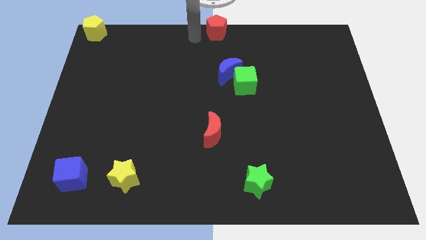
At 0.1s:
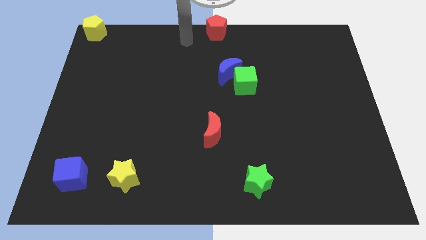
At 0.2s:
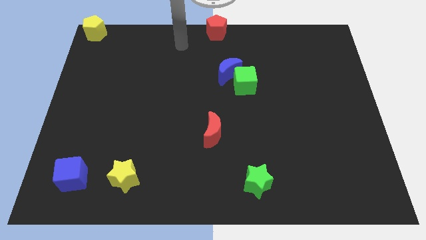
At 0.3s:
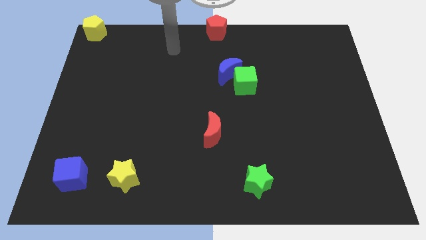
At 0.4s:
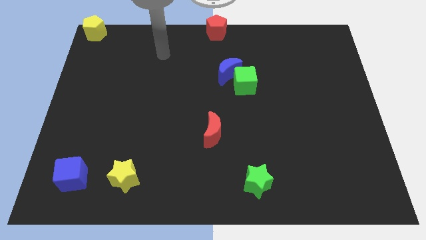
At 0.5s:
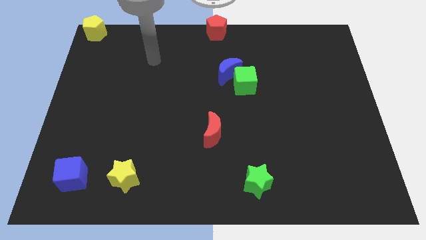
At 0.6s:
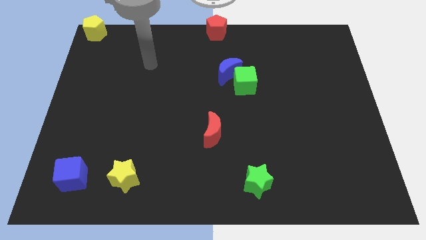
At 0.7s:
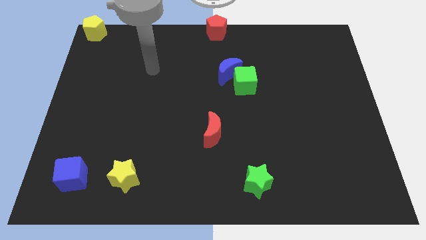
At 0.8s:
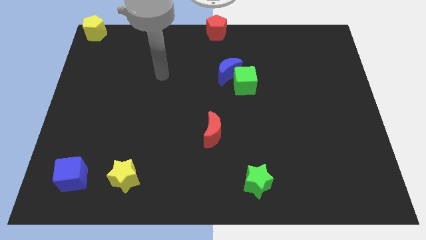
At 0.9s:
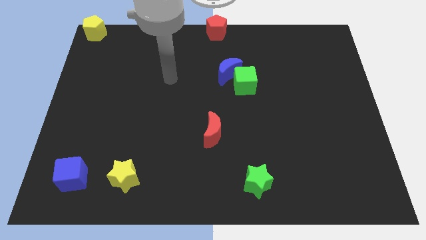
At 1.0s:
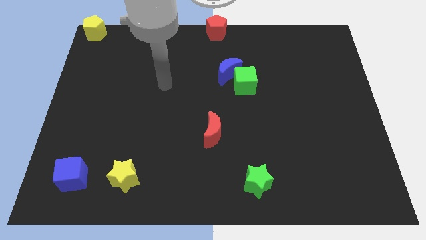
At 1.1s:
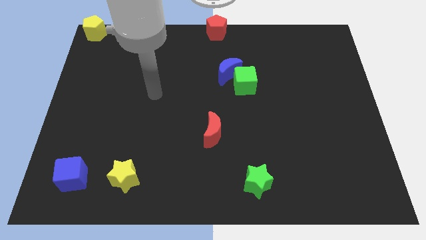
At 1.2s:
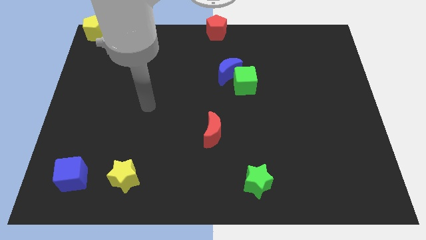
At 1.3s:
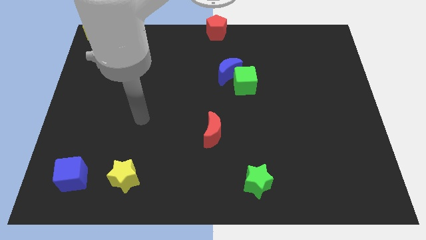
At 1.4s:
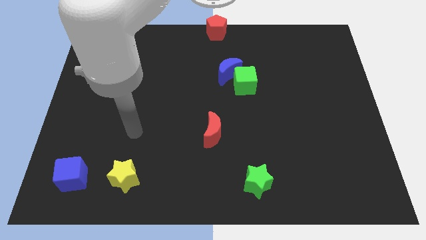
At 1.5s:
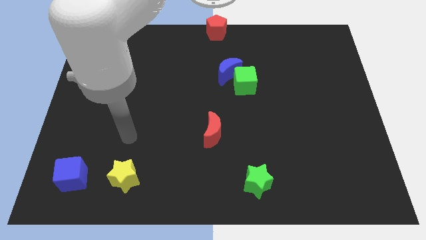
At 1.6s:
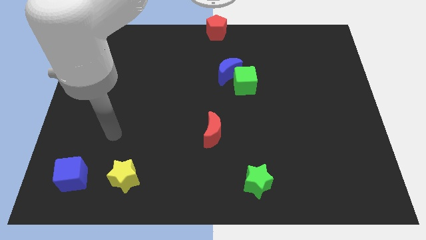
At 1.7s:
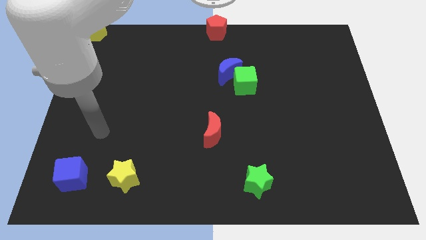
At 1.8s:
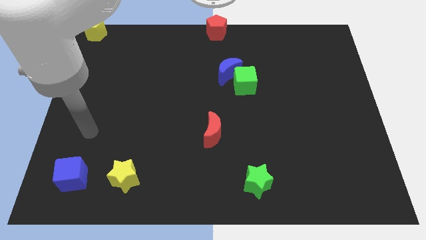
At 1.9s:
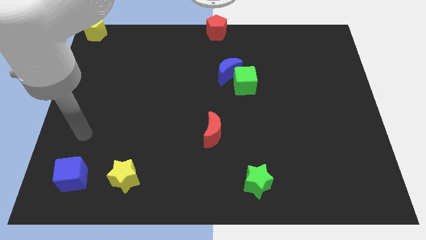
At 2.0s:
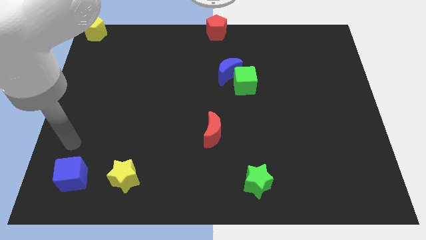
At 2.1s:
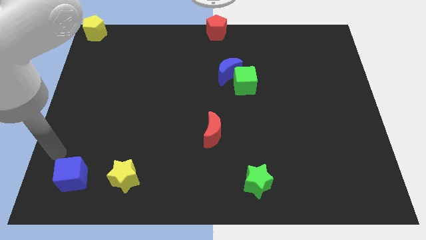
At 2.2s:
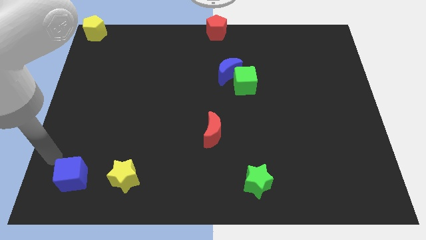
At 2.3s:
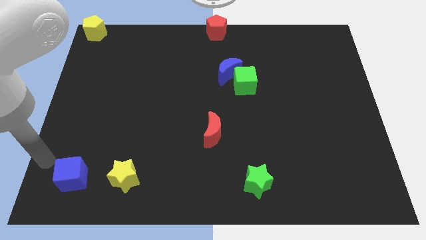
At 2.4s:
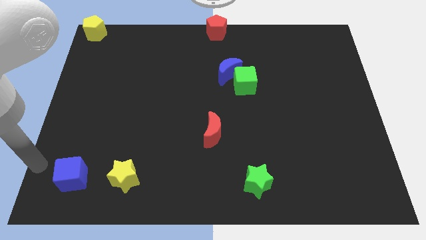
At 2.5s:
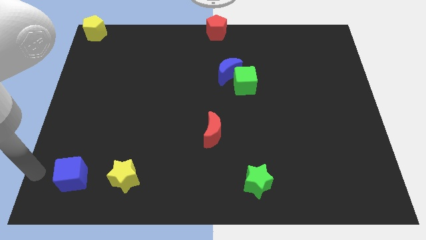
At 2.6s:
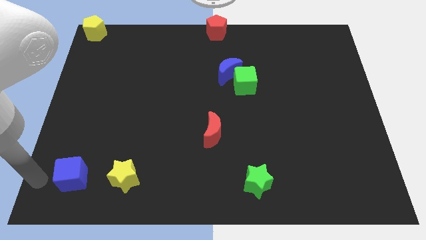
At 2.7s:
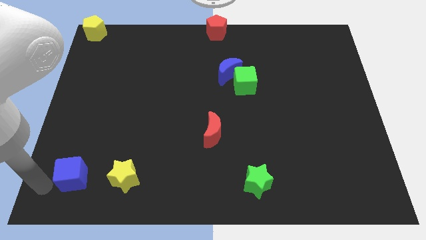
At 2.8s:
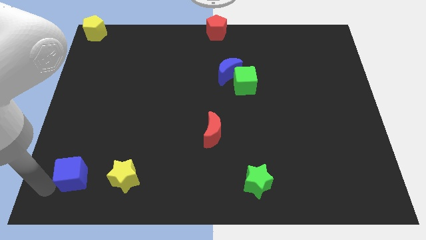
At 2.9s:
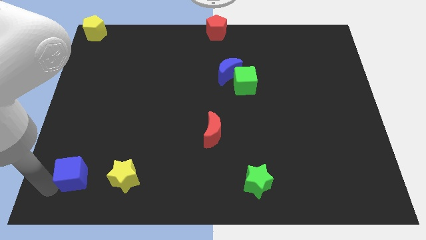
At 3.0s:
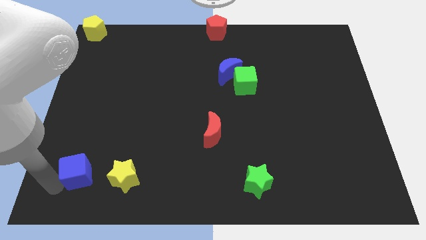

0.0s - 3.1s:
move the blue cube to the left side of the yellow star

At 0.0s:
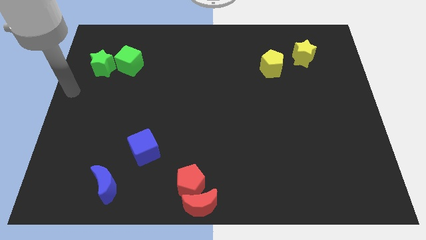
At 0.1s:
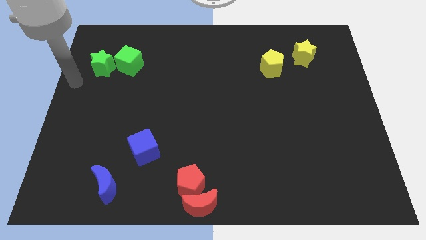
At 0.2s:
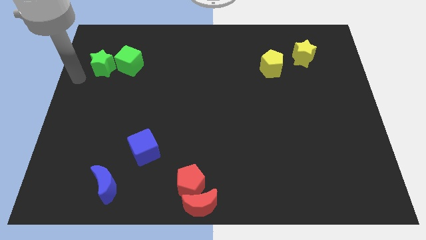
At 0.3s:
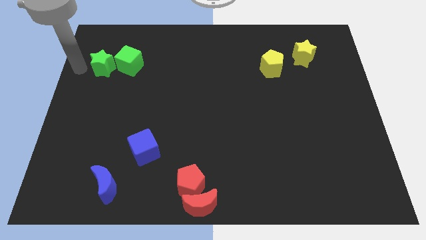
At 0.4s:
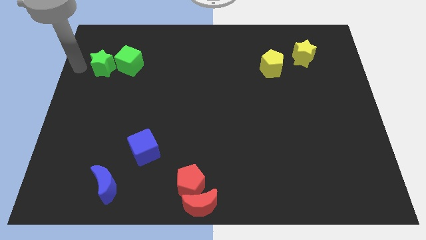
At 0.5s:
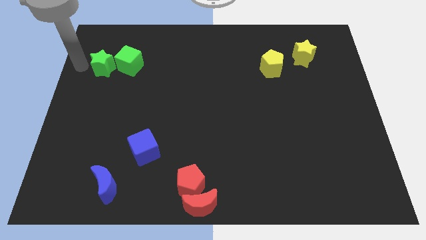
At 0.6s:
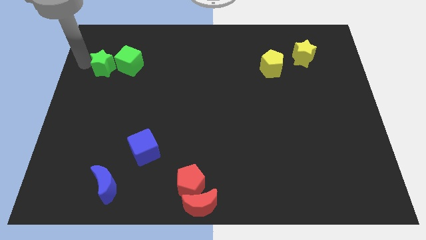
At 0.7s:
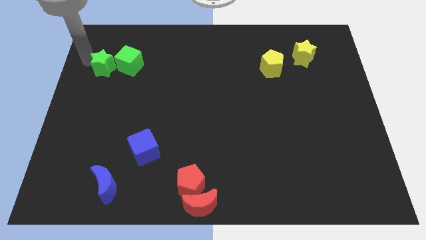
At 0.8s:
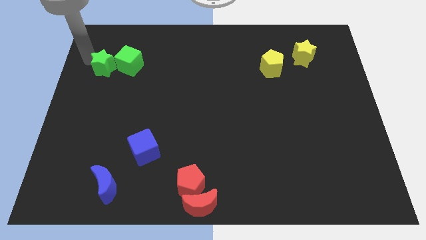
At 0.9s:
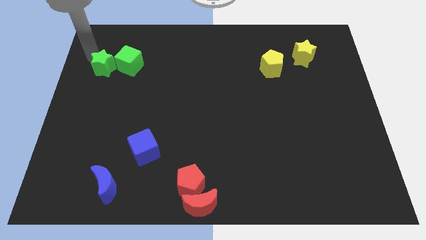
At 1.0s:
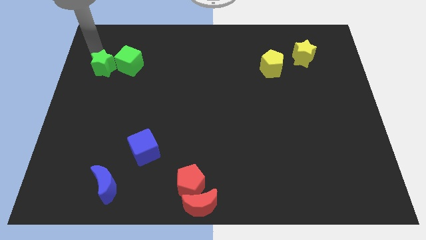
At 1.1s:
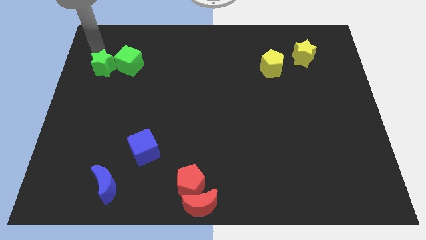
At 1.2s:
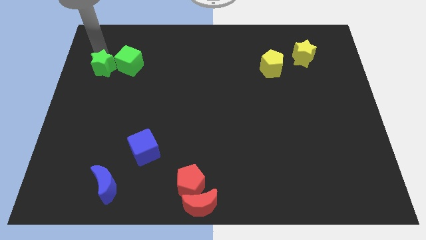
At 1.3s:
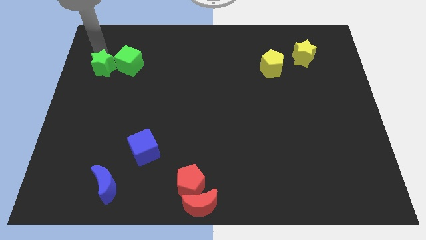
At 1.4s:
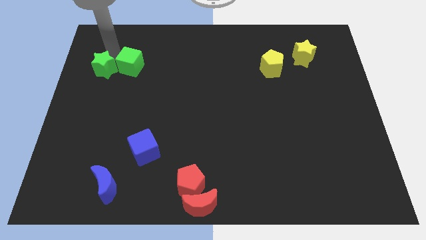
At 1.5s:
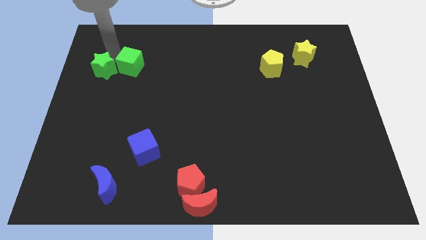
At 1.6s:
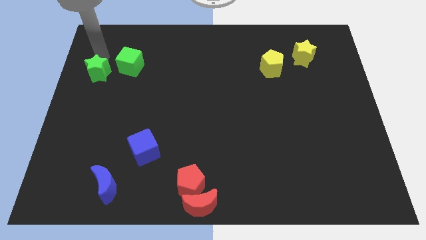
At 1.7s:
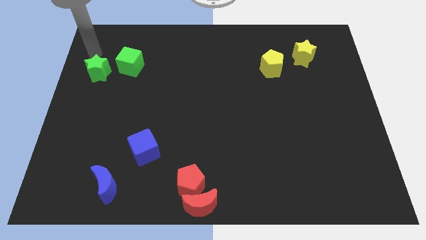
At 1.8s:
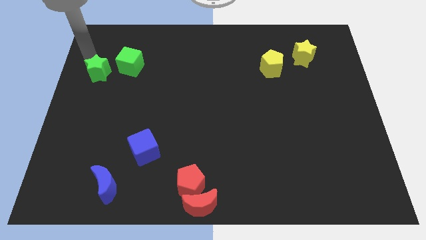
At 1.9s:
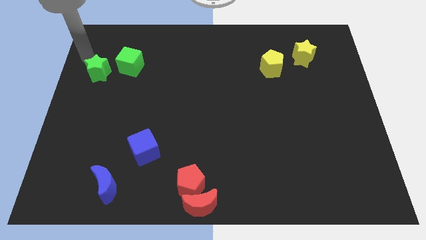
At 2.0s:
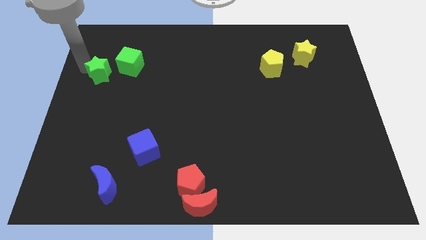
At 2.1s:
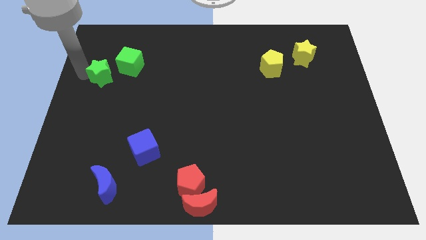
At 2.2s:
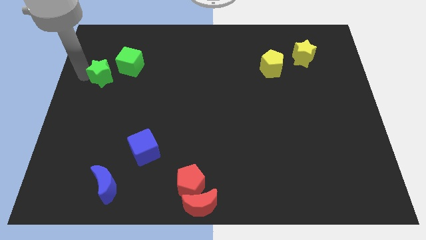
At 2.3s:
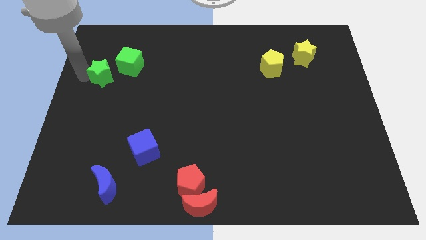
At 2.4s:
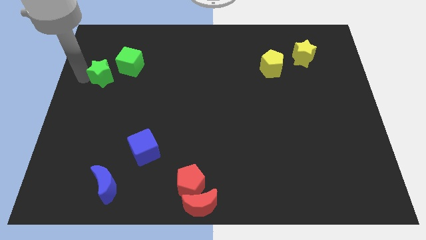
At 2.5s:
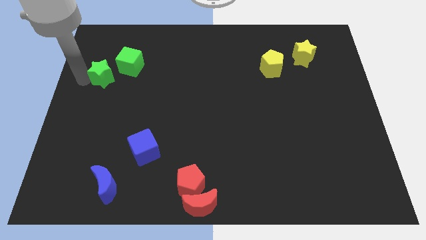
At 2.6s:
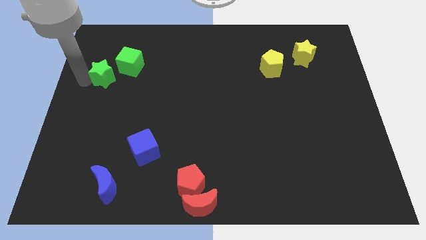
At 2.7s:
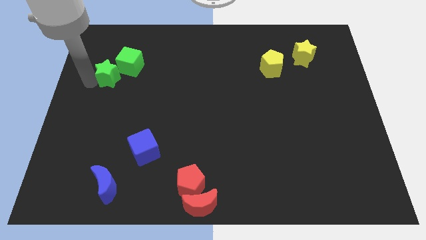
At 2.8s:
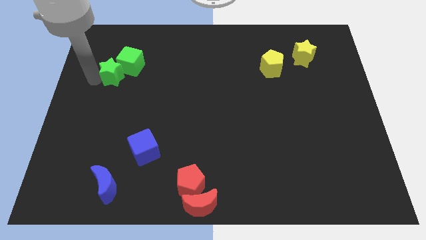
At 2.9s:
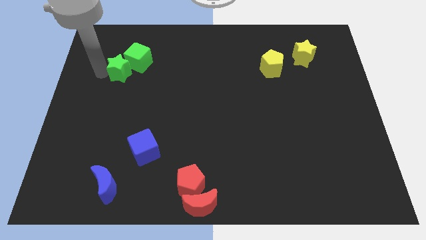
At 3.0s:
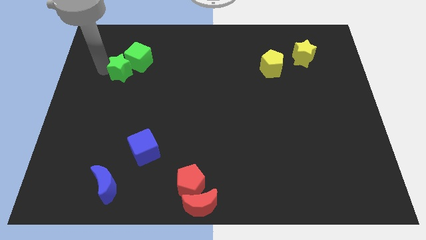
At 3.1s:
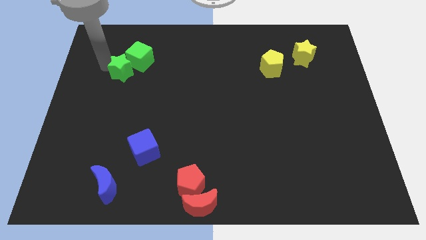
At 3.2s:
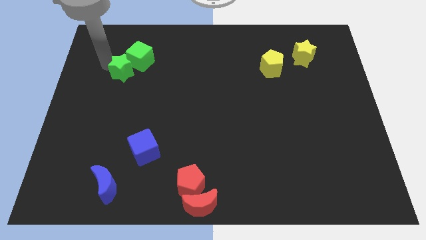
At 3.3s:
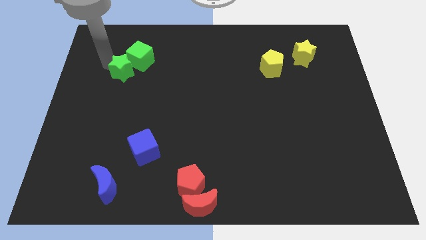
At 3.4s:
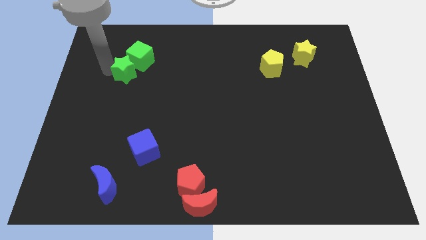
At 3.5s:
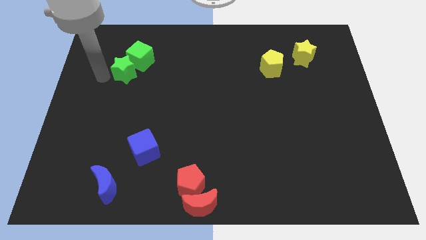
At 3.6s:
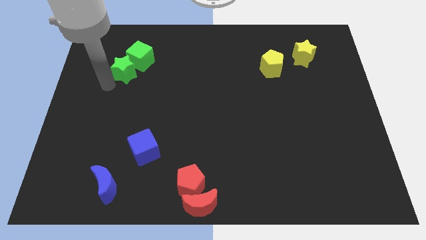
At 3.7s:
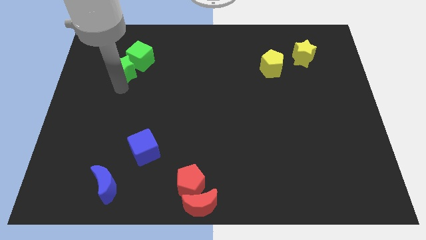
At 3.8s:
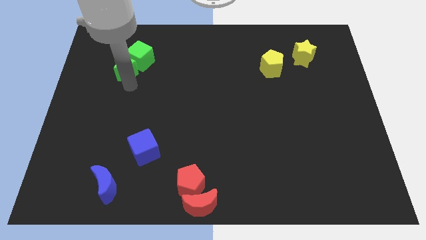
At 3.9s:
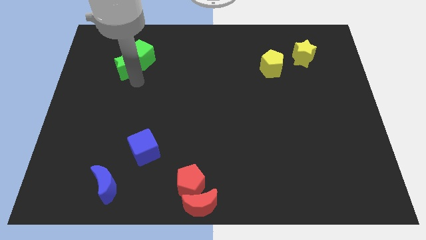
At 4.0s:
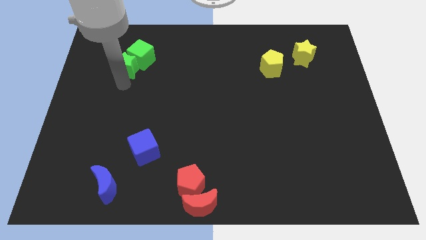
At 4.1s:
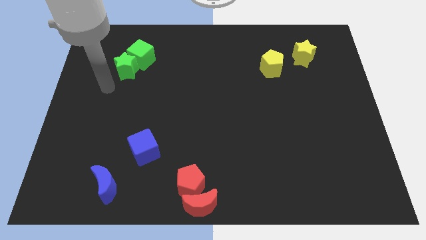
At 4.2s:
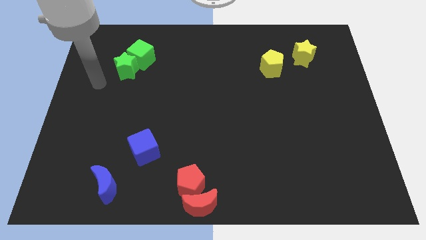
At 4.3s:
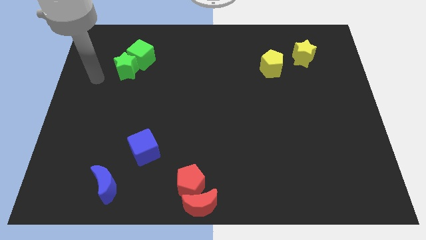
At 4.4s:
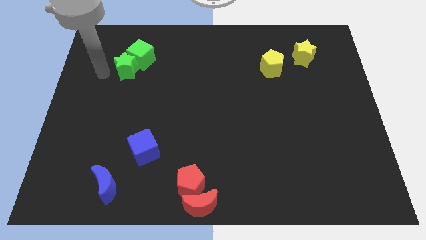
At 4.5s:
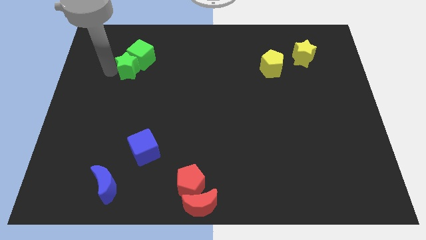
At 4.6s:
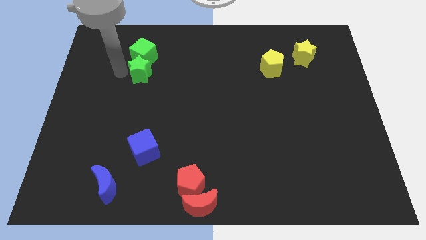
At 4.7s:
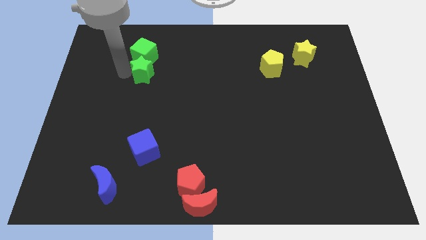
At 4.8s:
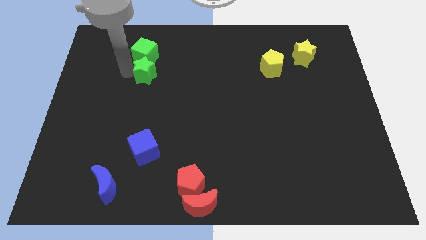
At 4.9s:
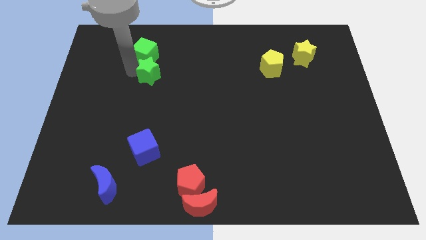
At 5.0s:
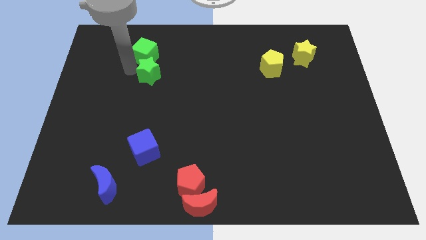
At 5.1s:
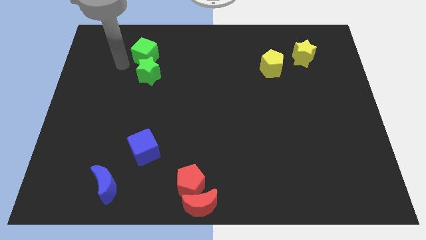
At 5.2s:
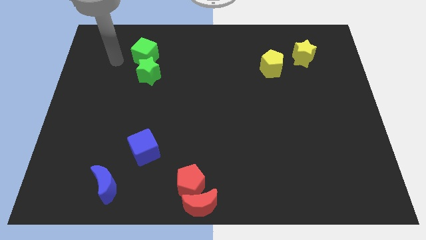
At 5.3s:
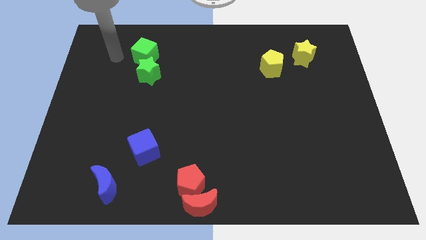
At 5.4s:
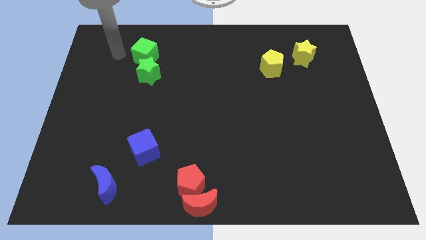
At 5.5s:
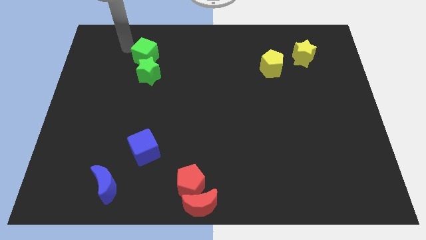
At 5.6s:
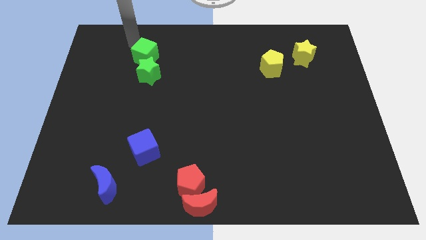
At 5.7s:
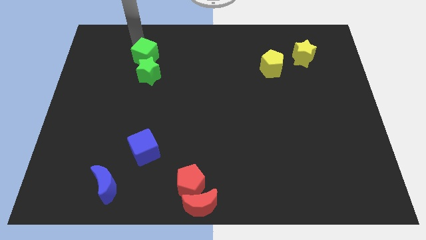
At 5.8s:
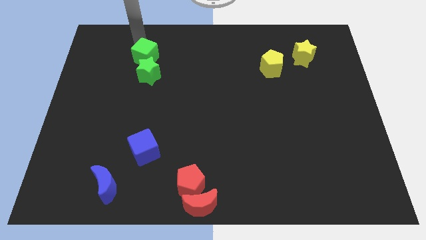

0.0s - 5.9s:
push the green star and green cube towards right

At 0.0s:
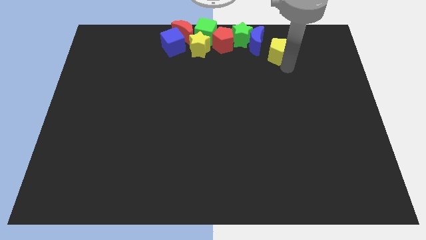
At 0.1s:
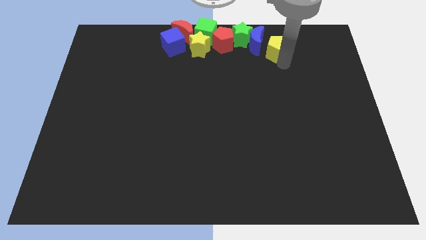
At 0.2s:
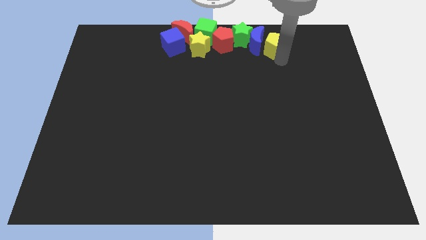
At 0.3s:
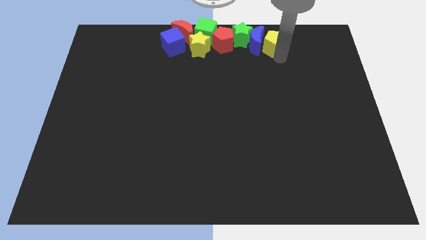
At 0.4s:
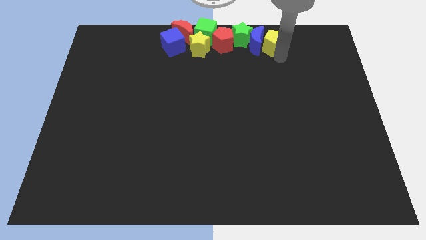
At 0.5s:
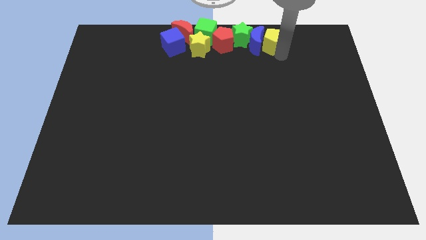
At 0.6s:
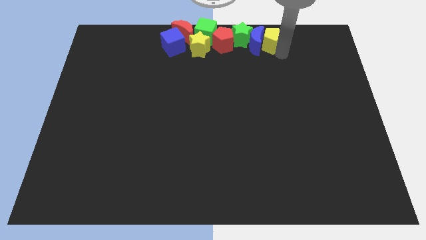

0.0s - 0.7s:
move the yellow pentagon close to the blue moon
